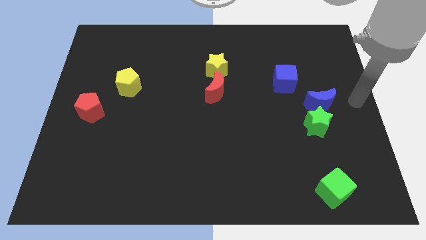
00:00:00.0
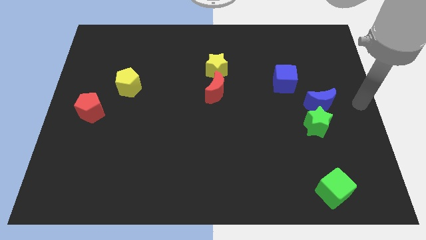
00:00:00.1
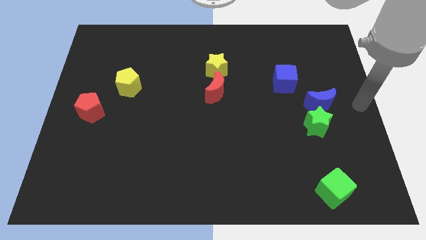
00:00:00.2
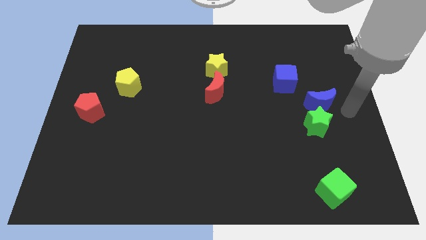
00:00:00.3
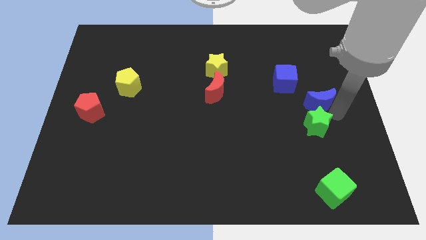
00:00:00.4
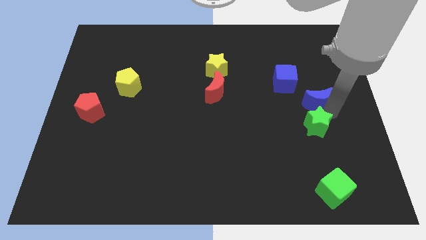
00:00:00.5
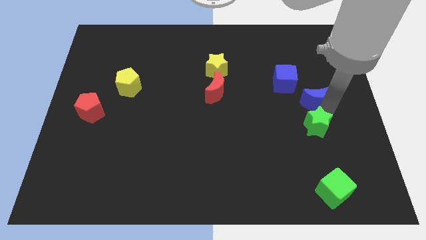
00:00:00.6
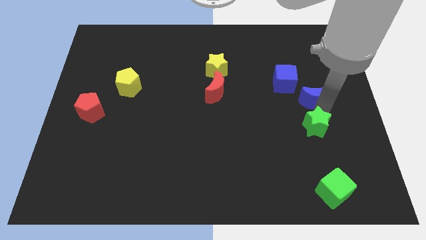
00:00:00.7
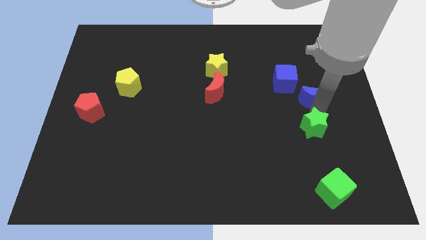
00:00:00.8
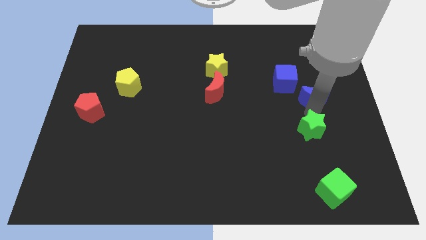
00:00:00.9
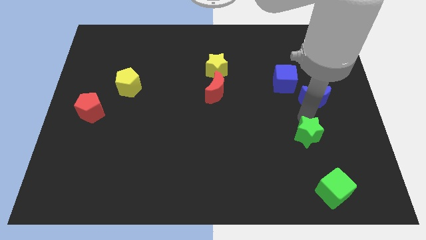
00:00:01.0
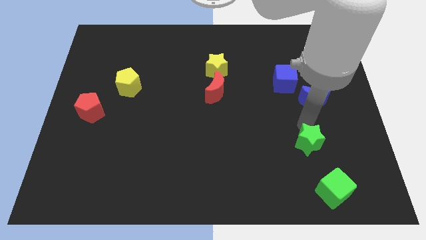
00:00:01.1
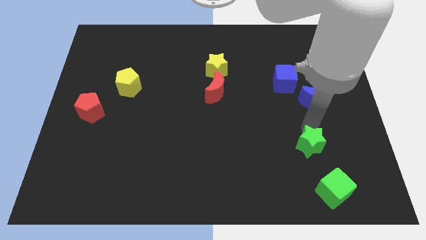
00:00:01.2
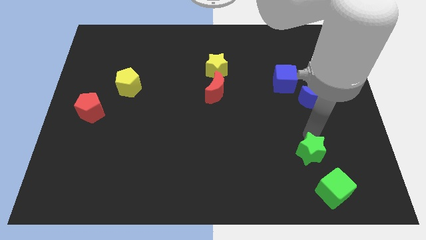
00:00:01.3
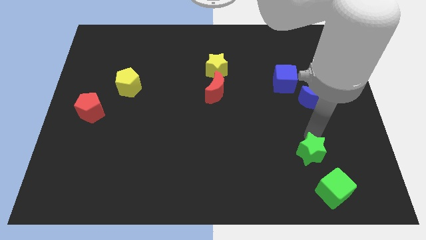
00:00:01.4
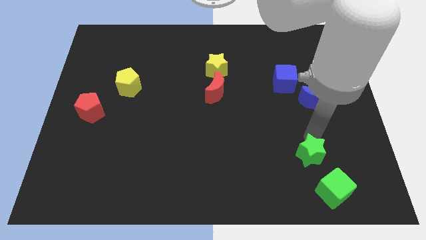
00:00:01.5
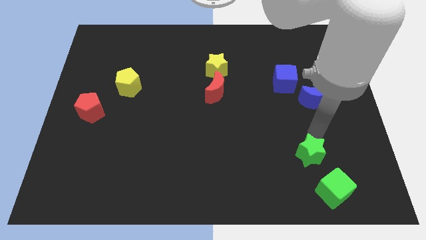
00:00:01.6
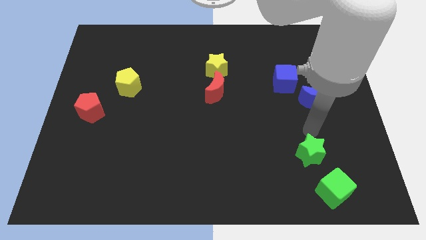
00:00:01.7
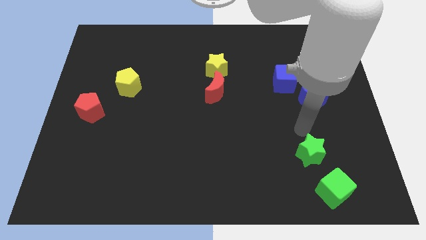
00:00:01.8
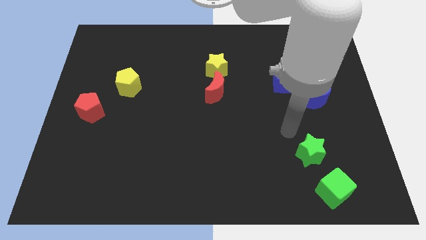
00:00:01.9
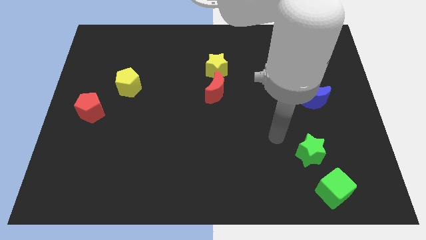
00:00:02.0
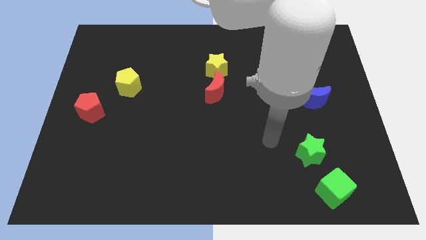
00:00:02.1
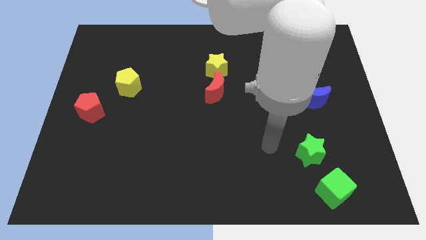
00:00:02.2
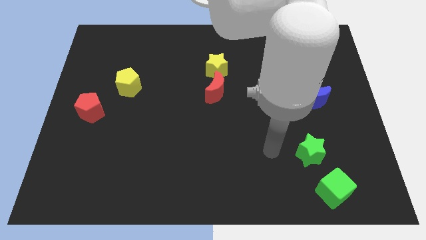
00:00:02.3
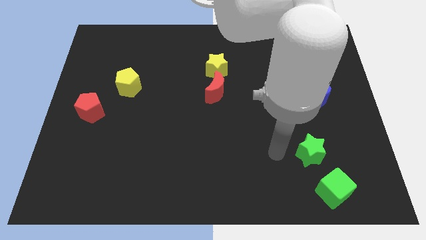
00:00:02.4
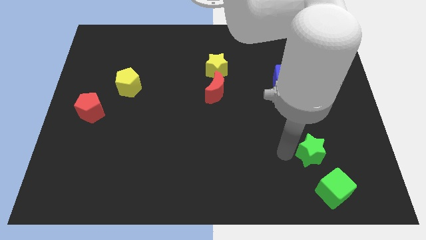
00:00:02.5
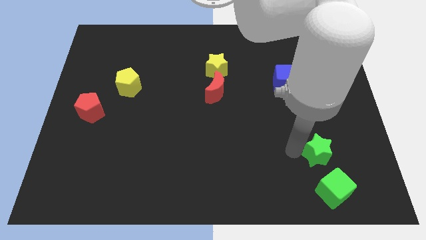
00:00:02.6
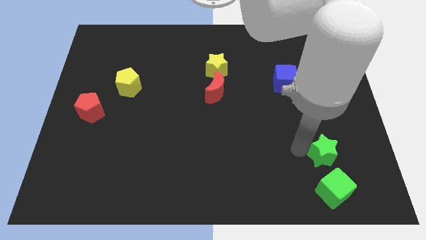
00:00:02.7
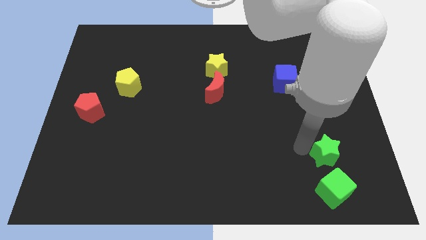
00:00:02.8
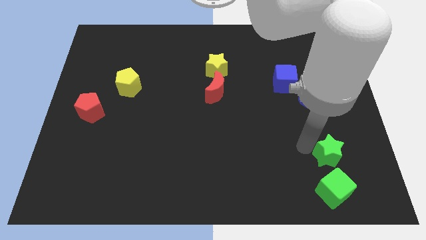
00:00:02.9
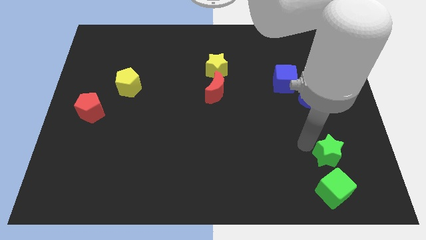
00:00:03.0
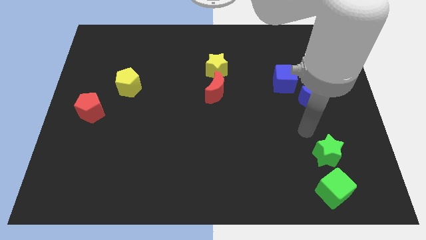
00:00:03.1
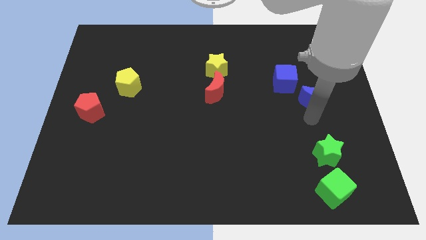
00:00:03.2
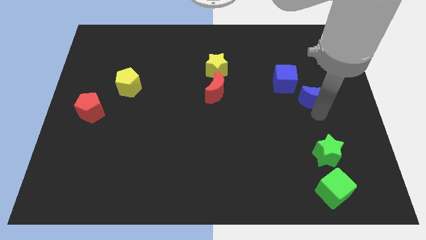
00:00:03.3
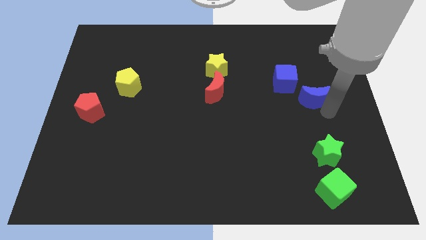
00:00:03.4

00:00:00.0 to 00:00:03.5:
move the green star close to the green cube

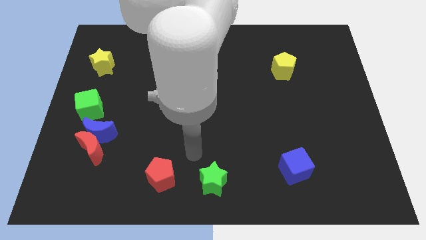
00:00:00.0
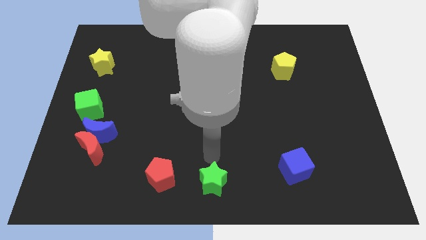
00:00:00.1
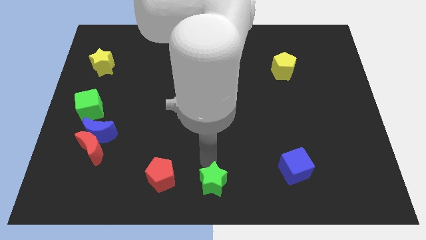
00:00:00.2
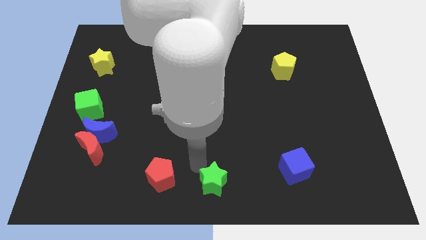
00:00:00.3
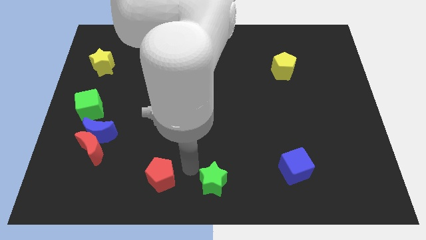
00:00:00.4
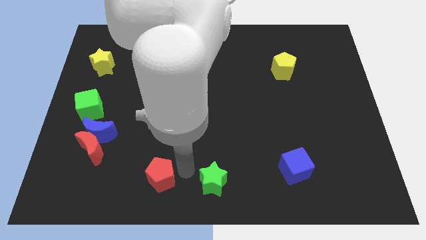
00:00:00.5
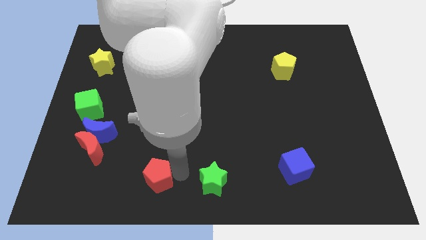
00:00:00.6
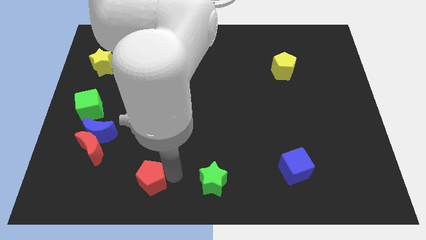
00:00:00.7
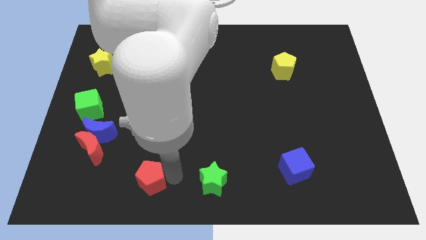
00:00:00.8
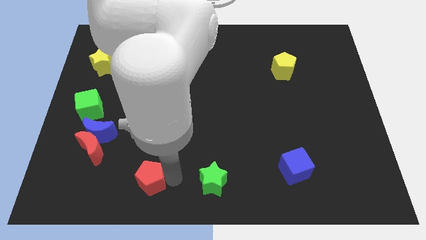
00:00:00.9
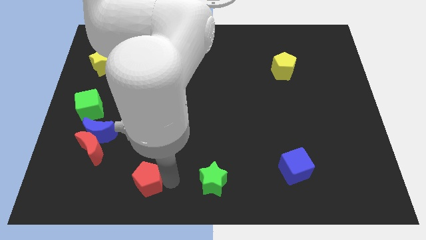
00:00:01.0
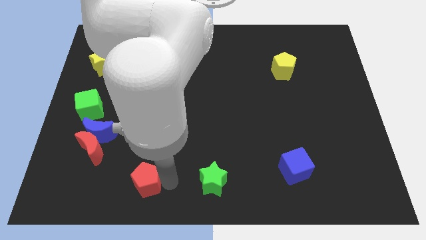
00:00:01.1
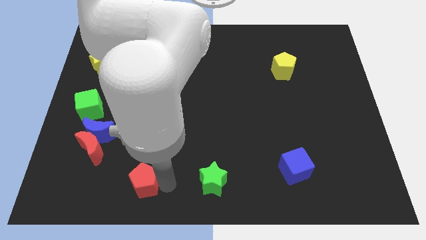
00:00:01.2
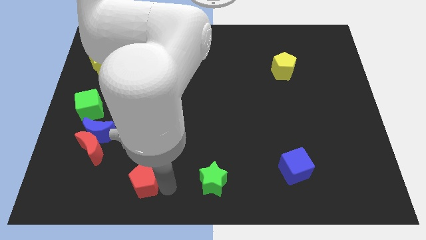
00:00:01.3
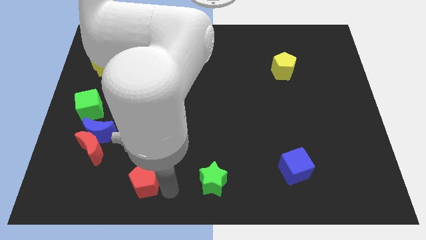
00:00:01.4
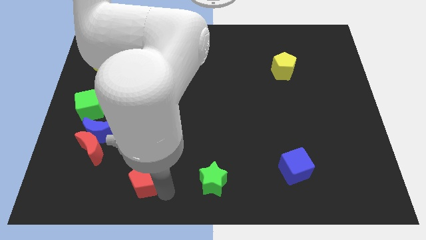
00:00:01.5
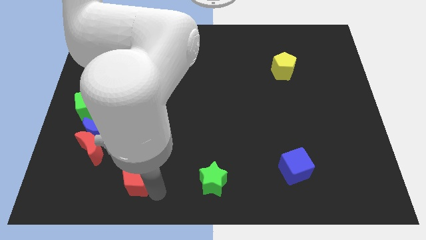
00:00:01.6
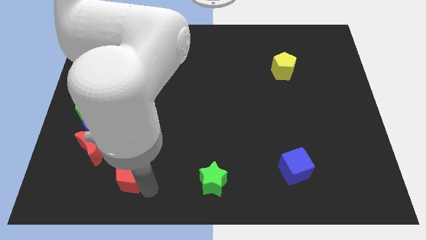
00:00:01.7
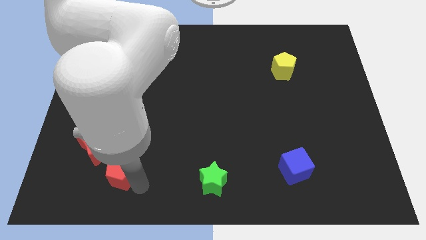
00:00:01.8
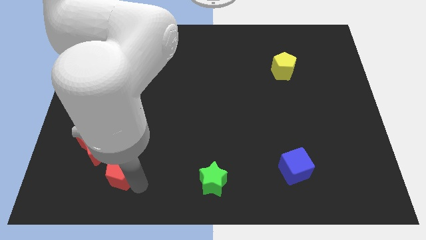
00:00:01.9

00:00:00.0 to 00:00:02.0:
move the red pentagon slightly towards left

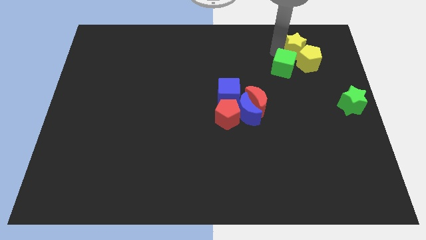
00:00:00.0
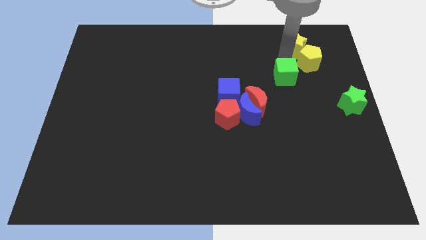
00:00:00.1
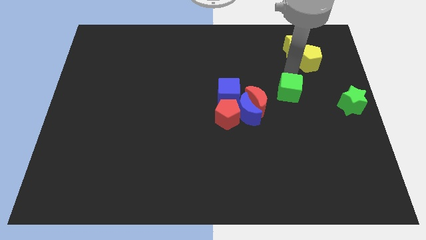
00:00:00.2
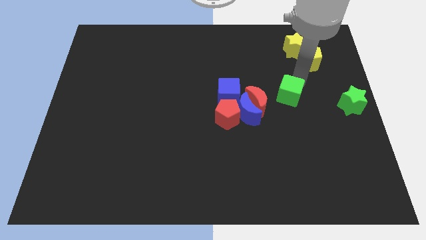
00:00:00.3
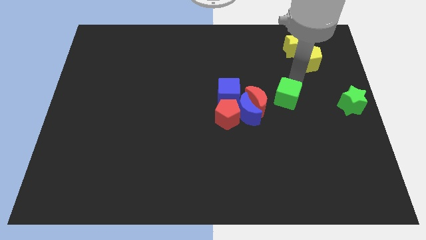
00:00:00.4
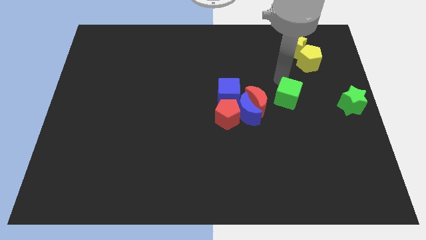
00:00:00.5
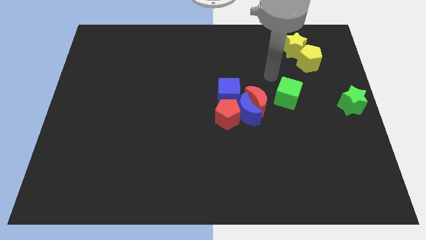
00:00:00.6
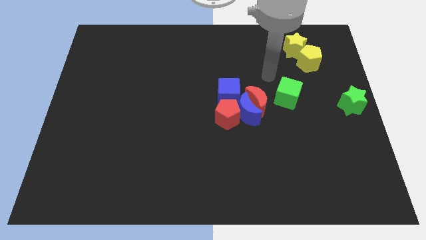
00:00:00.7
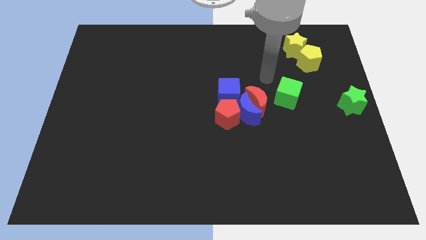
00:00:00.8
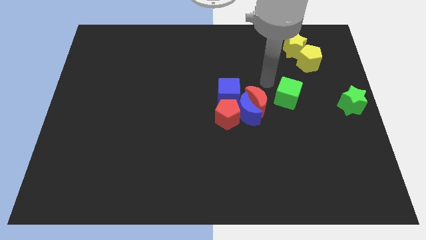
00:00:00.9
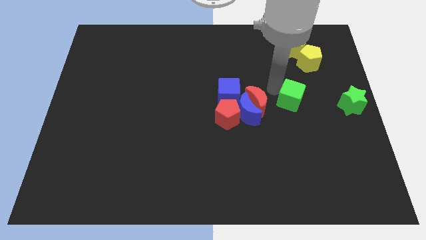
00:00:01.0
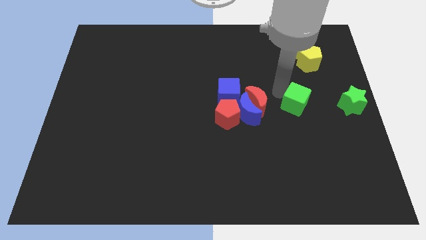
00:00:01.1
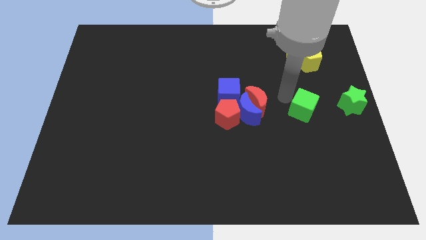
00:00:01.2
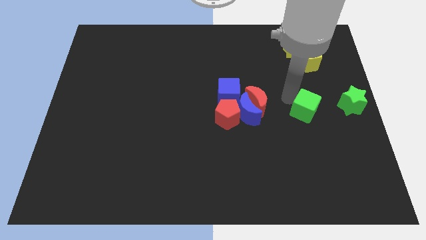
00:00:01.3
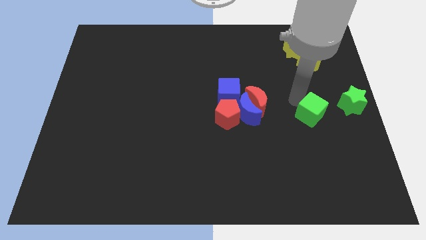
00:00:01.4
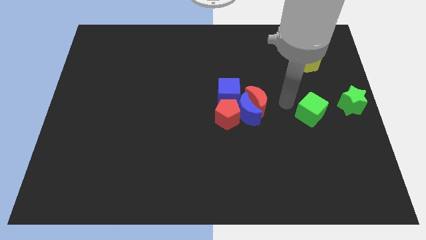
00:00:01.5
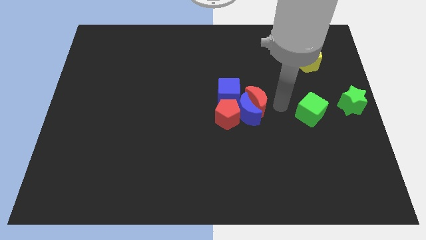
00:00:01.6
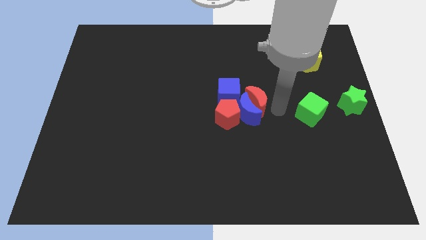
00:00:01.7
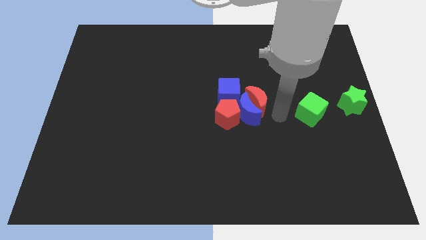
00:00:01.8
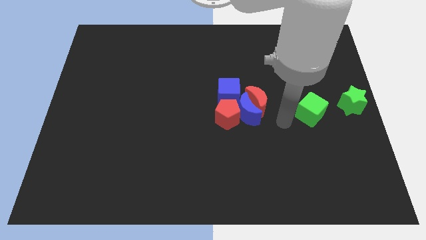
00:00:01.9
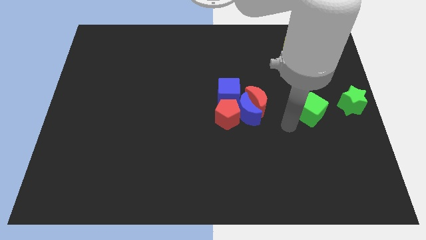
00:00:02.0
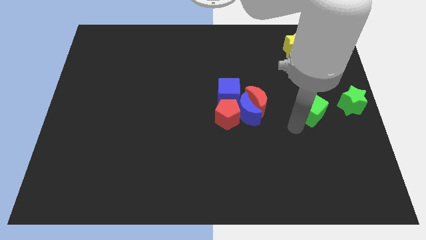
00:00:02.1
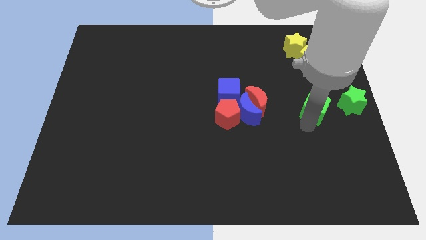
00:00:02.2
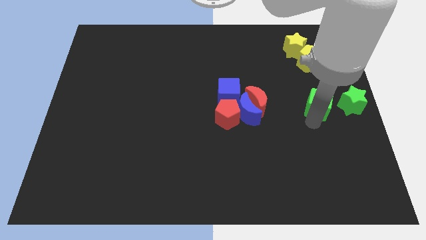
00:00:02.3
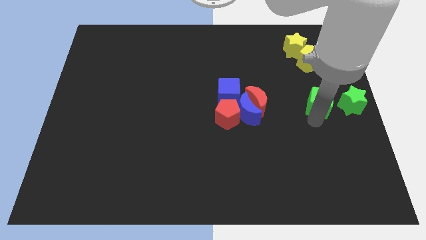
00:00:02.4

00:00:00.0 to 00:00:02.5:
separate green cube from yellow blocks

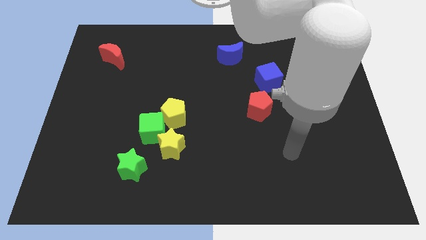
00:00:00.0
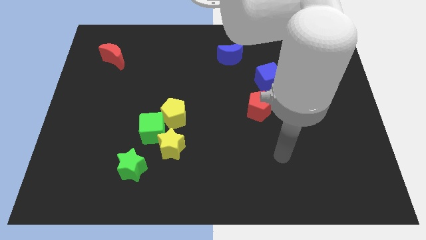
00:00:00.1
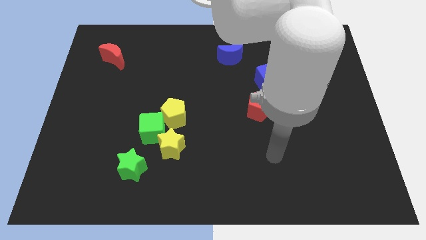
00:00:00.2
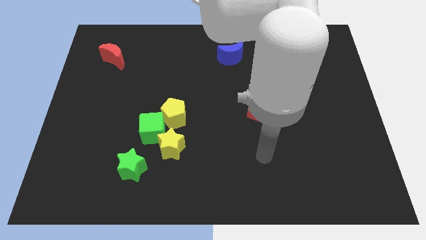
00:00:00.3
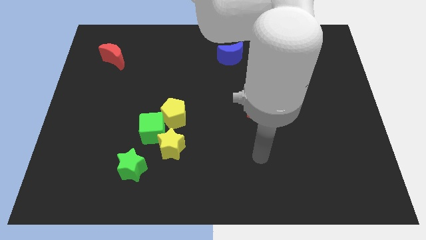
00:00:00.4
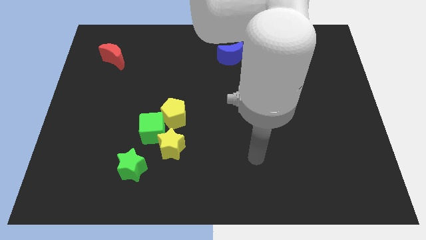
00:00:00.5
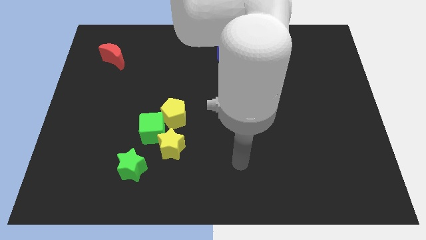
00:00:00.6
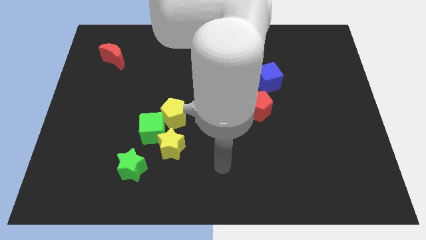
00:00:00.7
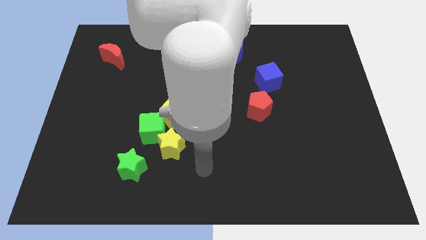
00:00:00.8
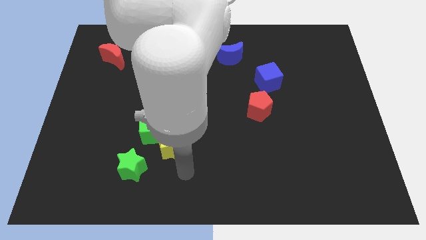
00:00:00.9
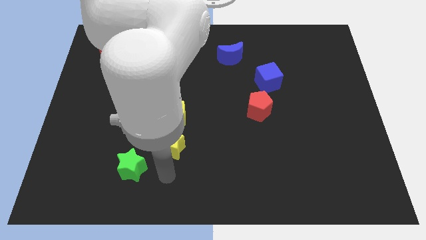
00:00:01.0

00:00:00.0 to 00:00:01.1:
move your arm close to the green star

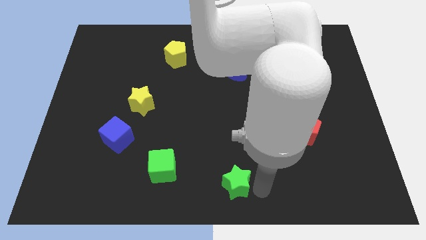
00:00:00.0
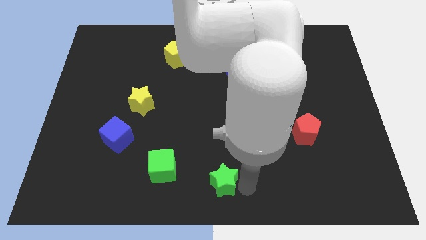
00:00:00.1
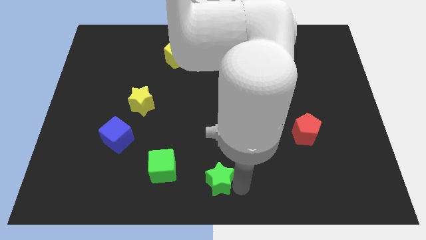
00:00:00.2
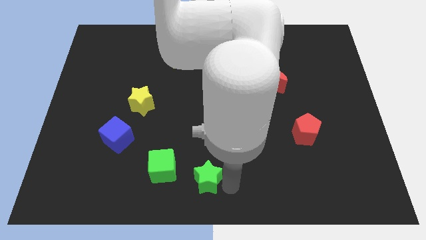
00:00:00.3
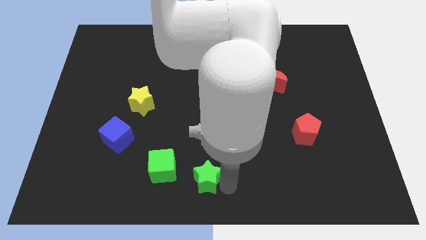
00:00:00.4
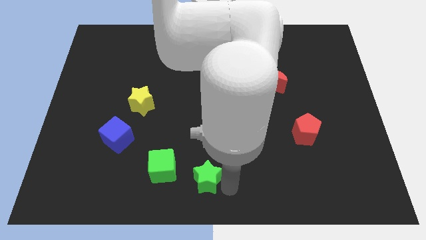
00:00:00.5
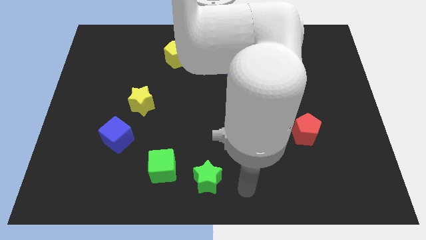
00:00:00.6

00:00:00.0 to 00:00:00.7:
move the green star towards the green cube
